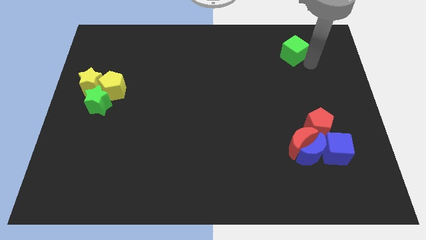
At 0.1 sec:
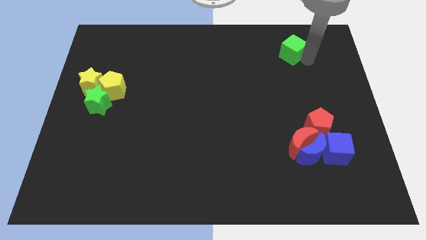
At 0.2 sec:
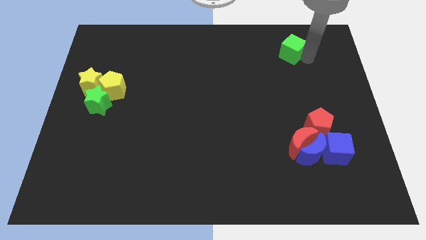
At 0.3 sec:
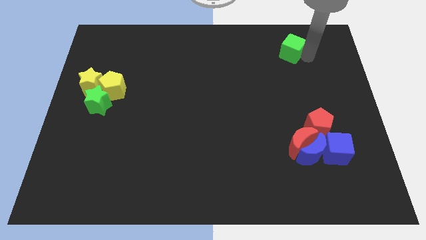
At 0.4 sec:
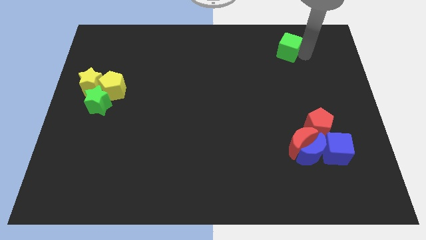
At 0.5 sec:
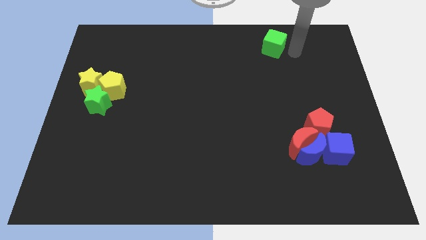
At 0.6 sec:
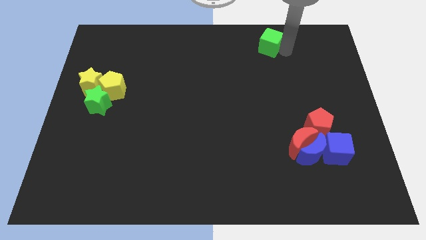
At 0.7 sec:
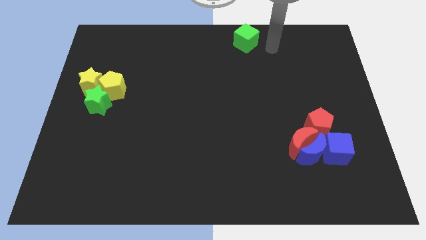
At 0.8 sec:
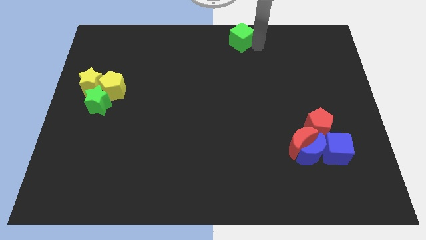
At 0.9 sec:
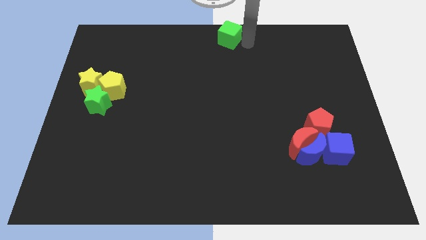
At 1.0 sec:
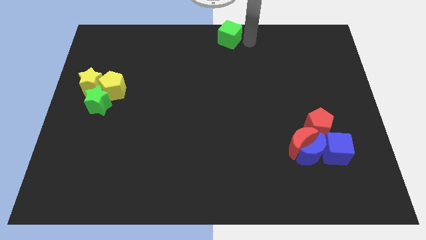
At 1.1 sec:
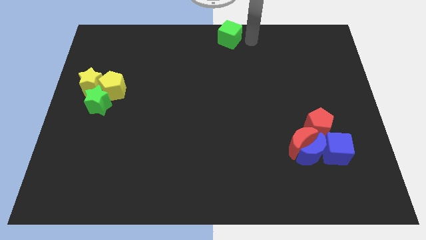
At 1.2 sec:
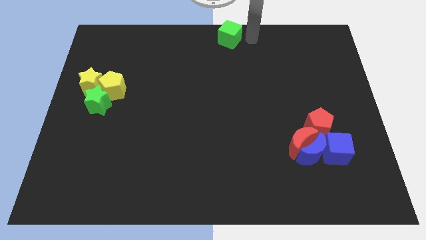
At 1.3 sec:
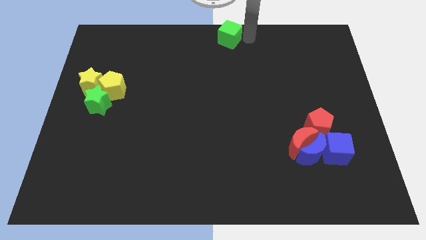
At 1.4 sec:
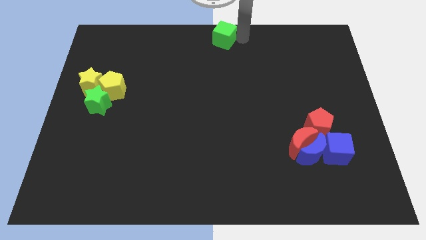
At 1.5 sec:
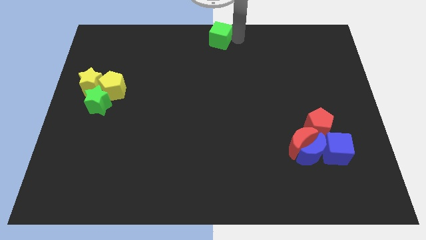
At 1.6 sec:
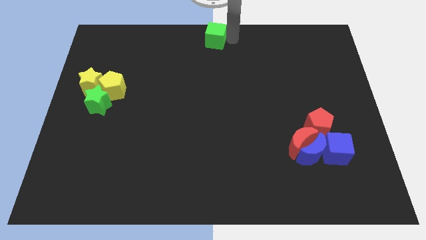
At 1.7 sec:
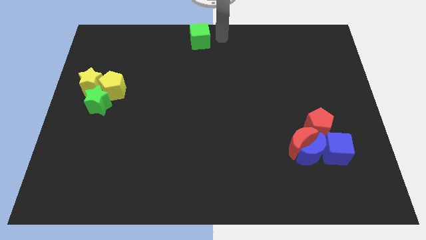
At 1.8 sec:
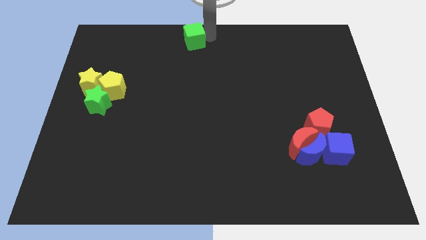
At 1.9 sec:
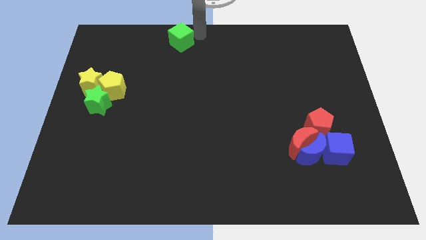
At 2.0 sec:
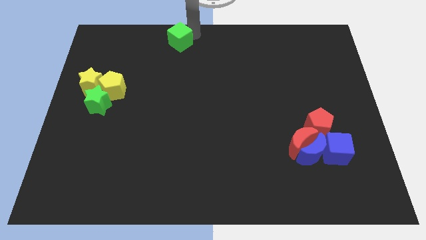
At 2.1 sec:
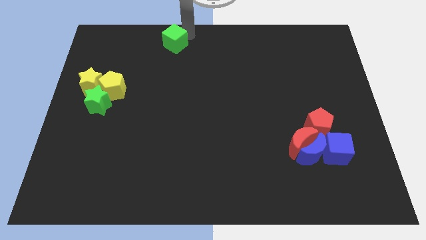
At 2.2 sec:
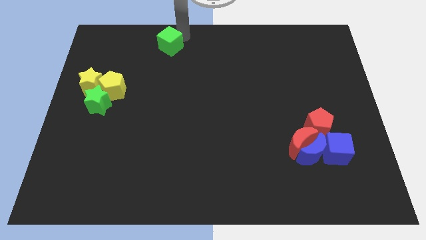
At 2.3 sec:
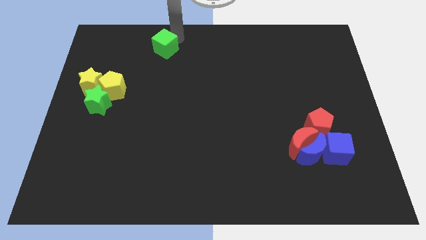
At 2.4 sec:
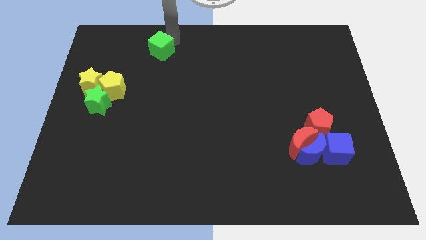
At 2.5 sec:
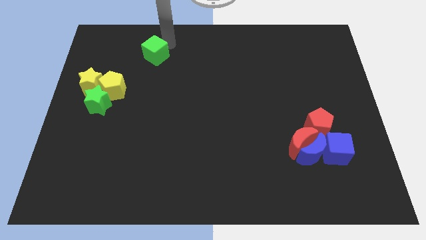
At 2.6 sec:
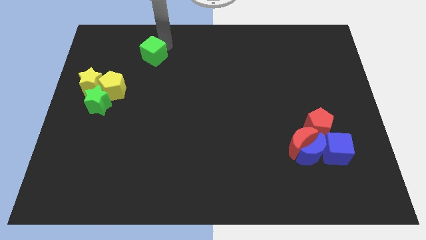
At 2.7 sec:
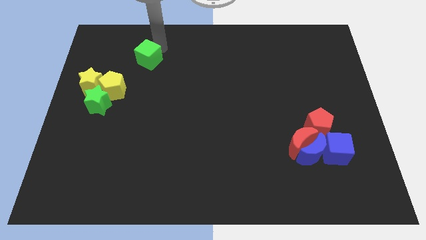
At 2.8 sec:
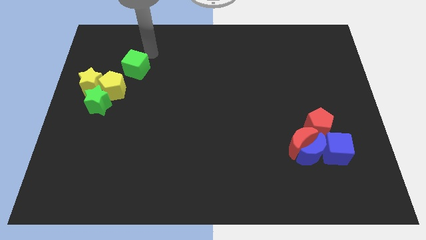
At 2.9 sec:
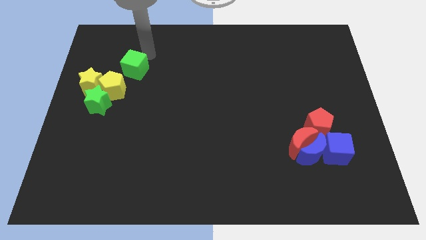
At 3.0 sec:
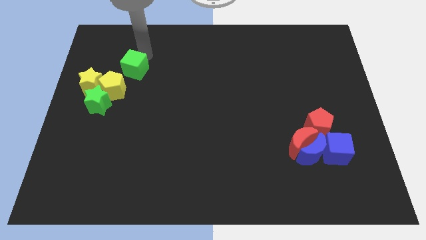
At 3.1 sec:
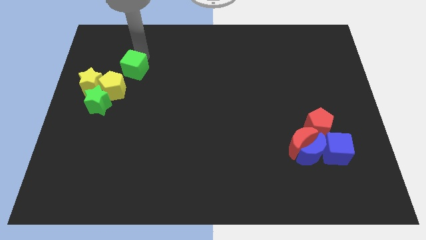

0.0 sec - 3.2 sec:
slide the green cube towards the group of blocks

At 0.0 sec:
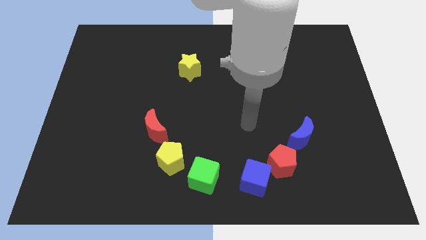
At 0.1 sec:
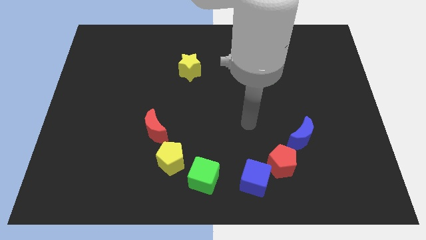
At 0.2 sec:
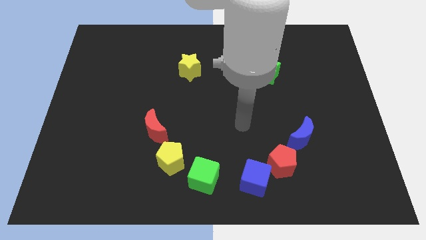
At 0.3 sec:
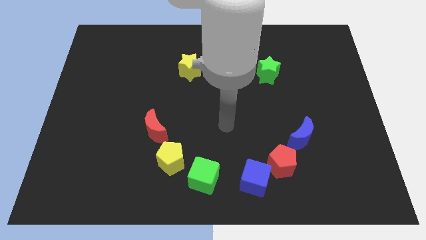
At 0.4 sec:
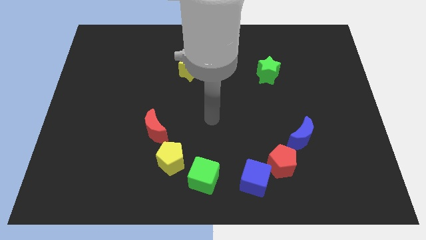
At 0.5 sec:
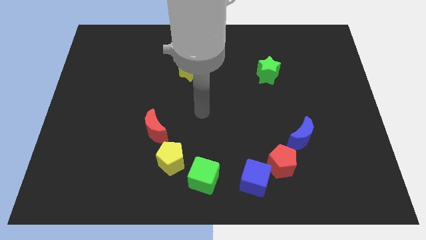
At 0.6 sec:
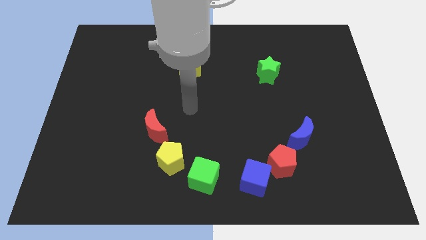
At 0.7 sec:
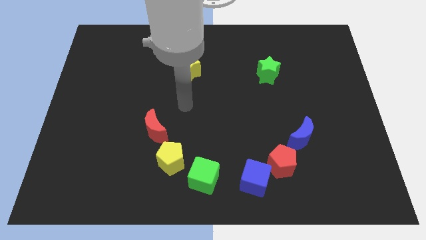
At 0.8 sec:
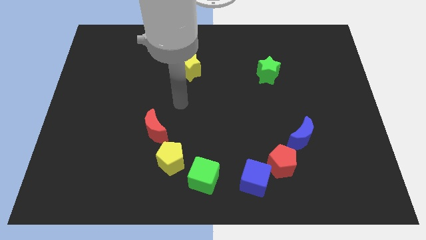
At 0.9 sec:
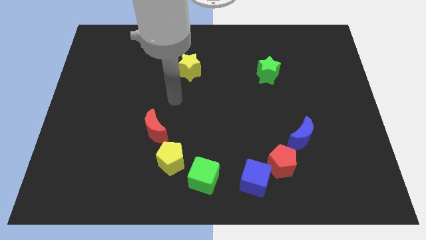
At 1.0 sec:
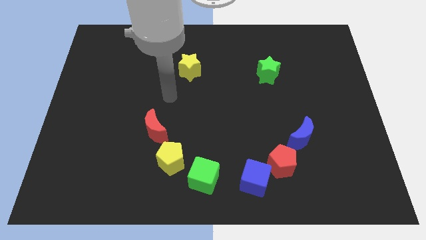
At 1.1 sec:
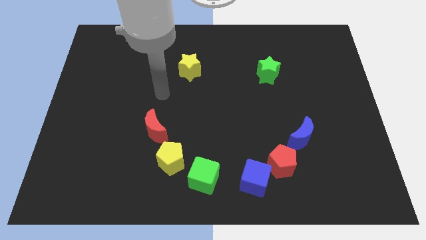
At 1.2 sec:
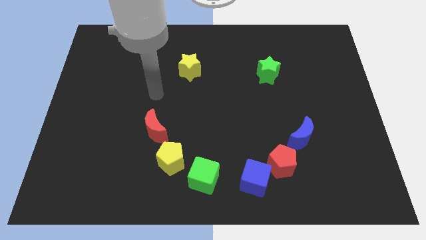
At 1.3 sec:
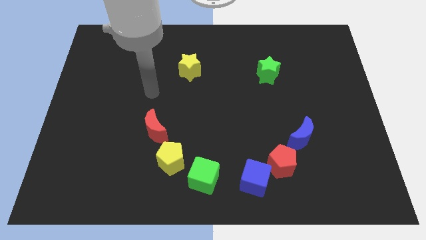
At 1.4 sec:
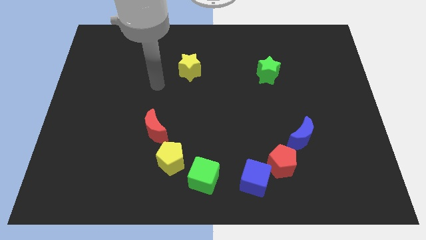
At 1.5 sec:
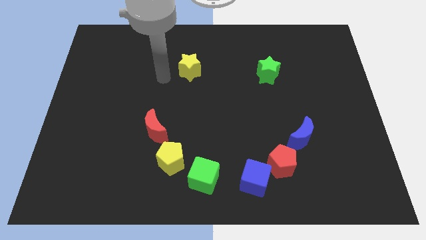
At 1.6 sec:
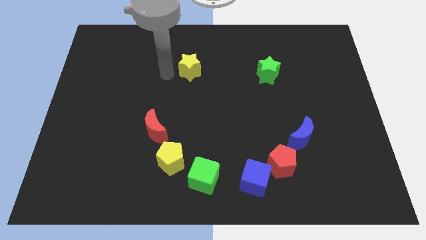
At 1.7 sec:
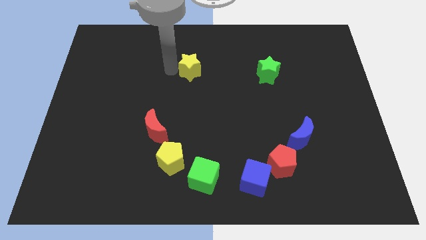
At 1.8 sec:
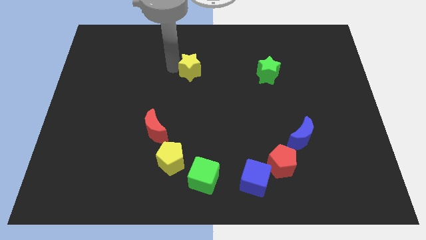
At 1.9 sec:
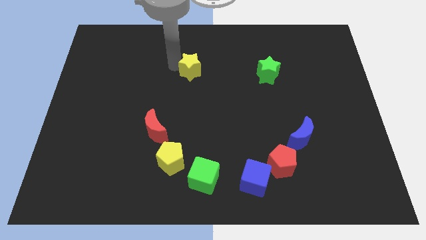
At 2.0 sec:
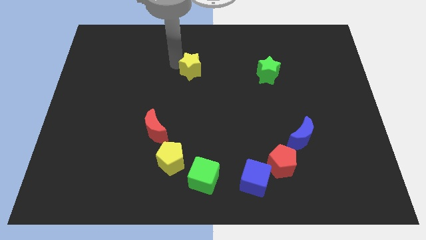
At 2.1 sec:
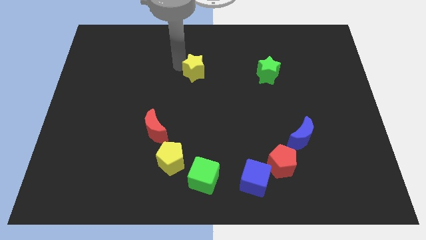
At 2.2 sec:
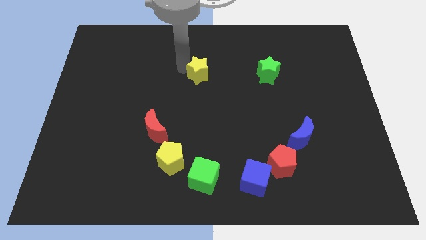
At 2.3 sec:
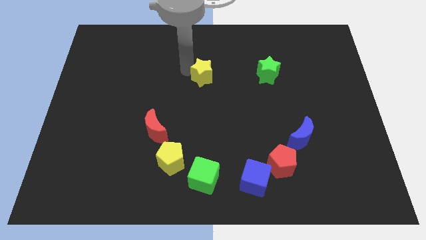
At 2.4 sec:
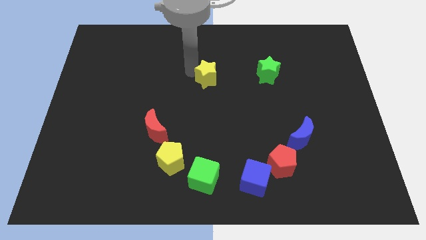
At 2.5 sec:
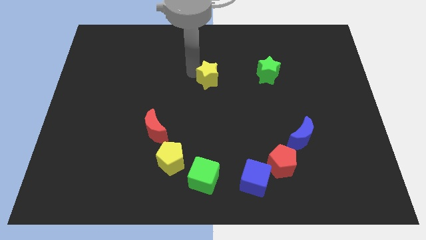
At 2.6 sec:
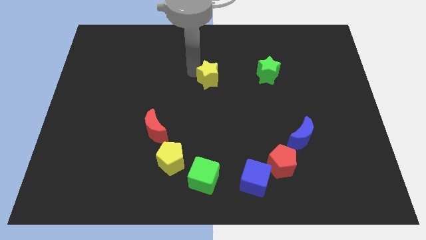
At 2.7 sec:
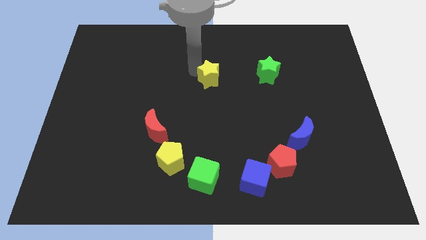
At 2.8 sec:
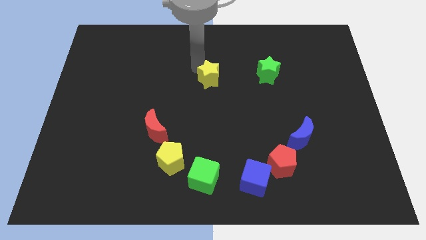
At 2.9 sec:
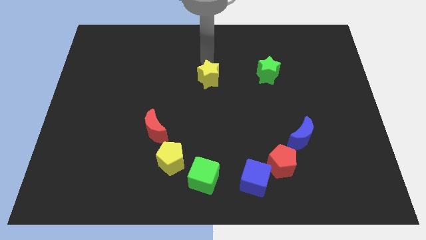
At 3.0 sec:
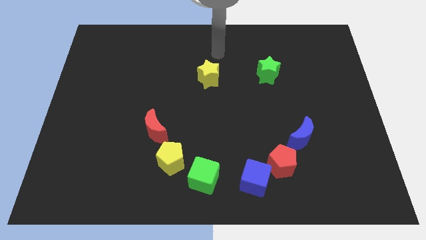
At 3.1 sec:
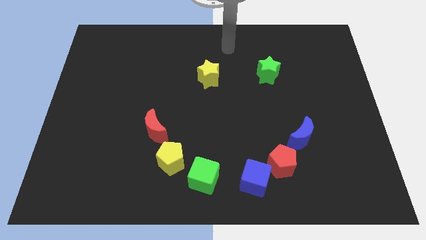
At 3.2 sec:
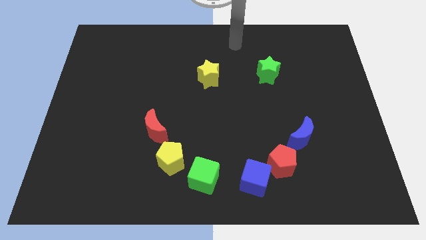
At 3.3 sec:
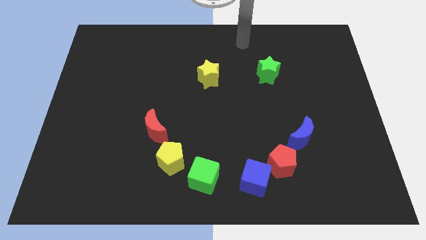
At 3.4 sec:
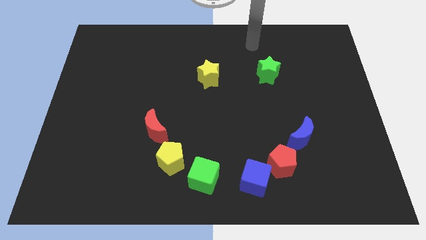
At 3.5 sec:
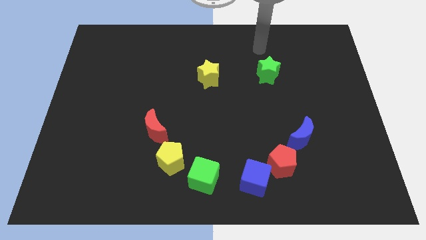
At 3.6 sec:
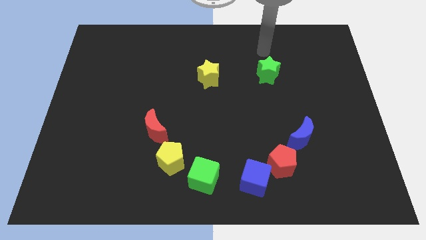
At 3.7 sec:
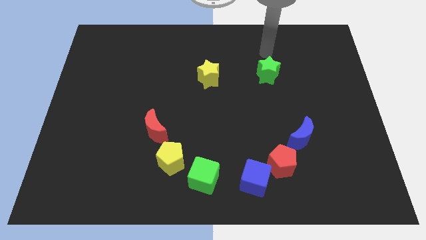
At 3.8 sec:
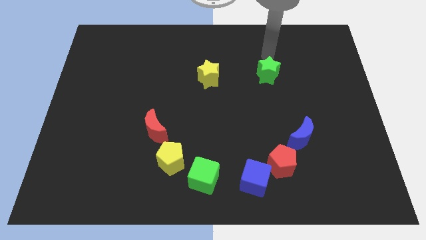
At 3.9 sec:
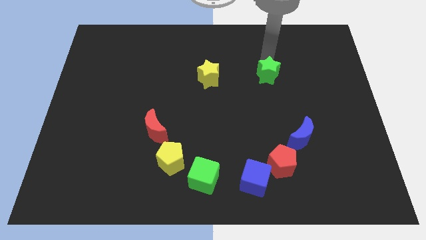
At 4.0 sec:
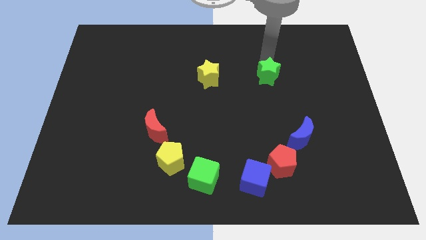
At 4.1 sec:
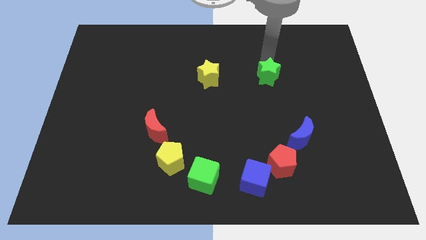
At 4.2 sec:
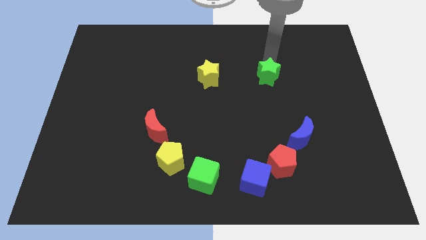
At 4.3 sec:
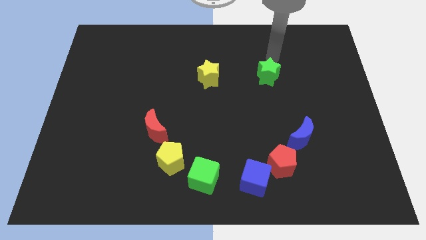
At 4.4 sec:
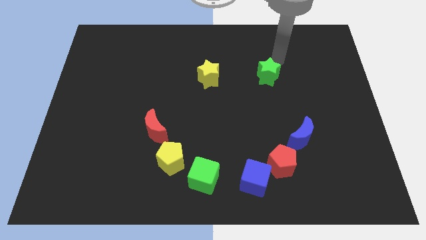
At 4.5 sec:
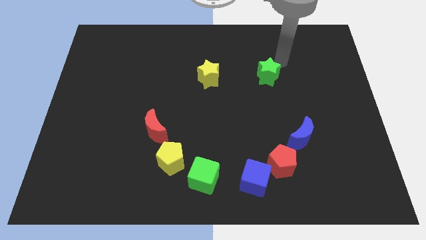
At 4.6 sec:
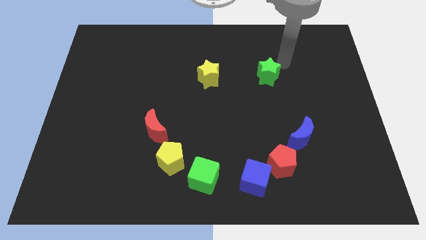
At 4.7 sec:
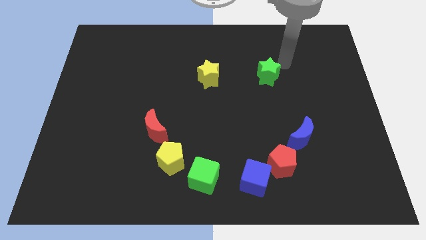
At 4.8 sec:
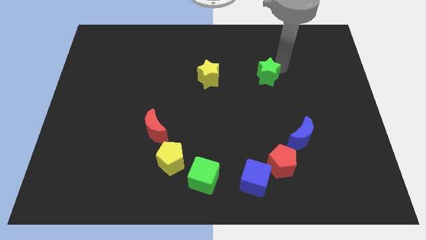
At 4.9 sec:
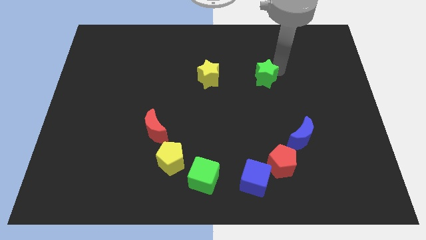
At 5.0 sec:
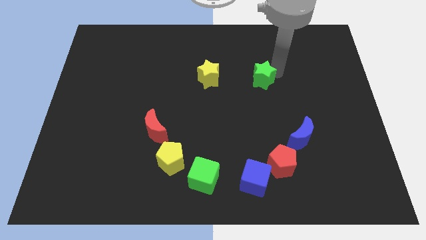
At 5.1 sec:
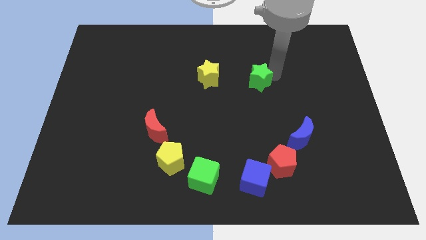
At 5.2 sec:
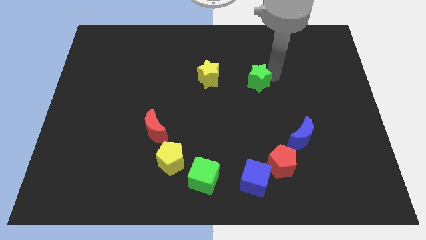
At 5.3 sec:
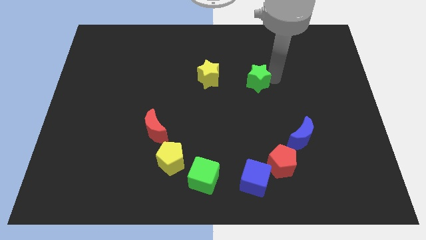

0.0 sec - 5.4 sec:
push two stars towards the center of the board slightly

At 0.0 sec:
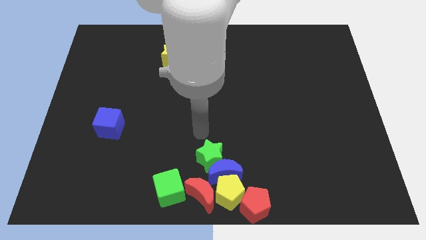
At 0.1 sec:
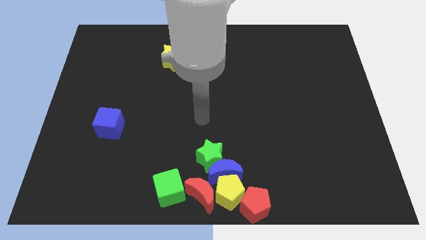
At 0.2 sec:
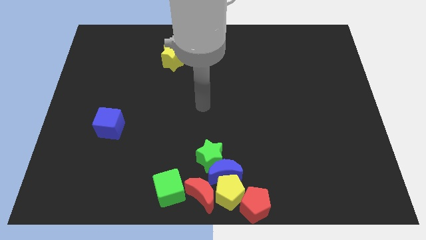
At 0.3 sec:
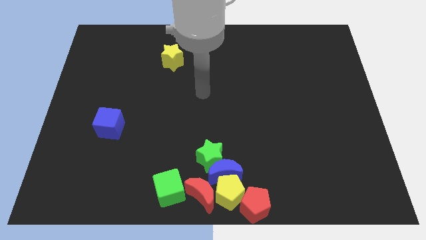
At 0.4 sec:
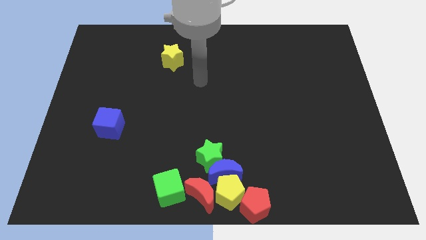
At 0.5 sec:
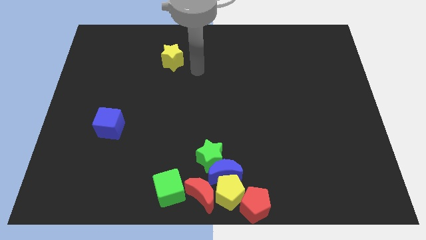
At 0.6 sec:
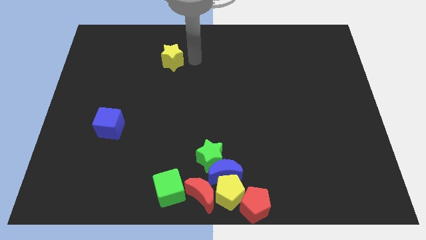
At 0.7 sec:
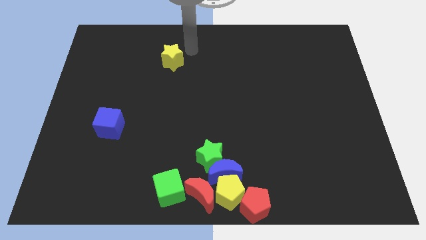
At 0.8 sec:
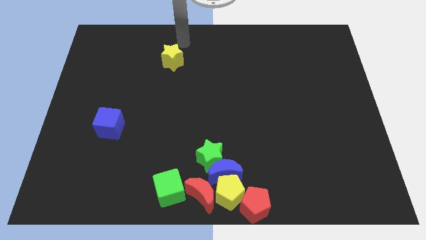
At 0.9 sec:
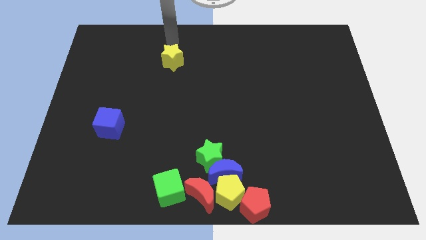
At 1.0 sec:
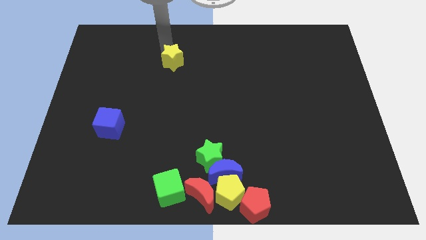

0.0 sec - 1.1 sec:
move your arm to the top of the yellow star
